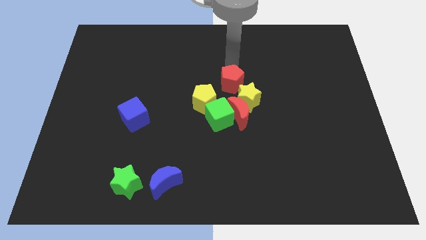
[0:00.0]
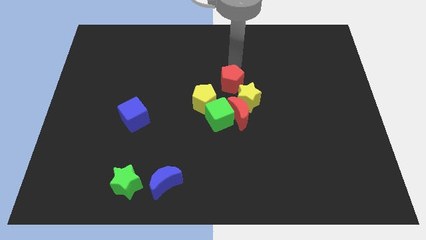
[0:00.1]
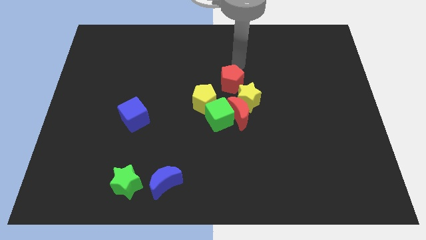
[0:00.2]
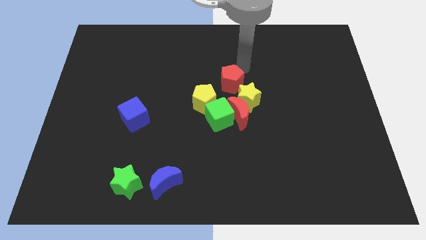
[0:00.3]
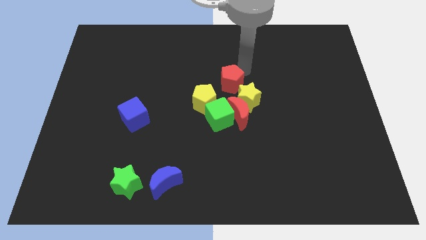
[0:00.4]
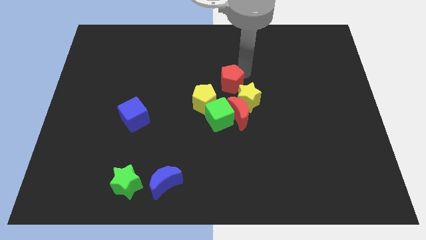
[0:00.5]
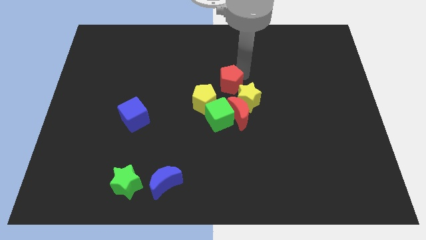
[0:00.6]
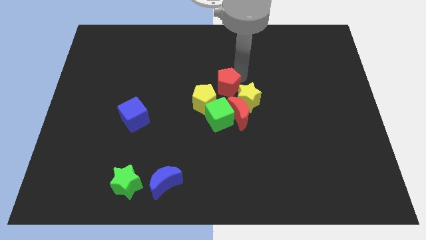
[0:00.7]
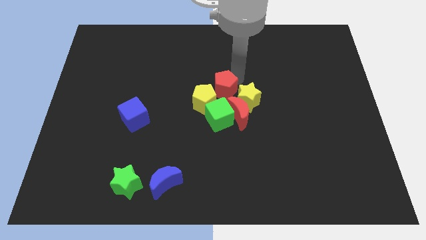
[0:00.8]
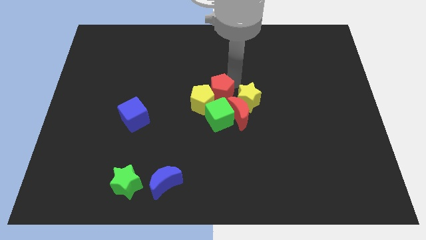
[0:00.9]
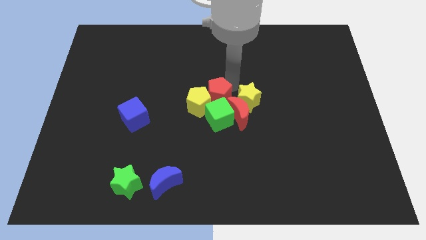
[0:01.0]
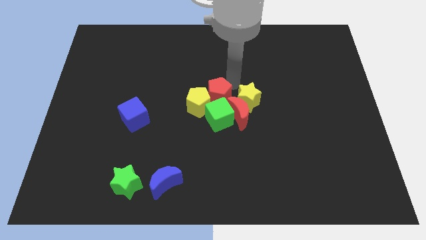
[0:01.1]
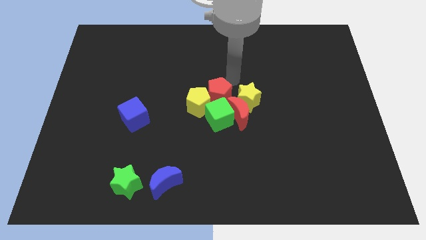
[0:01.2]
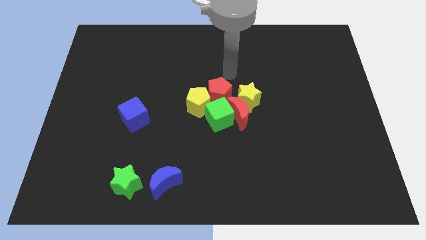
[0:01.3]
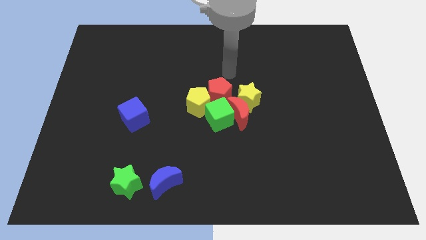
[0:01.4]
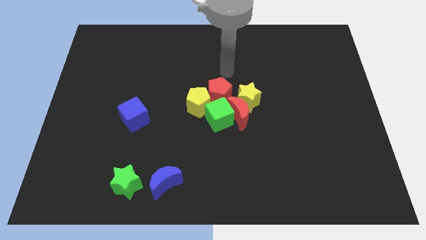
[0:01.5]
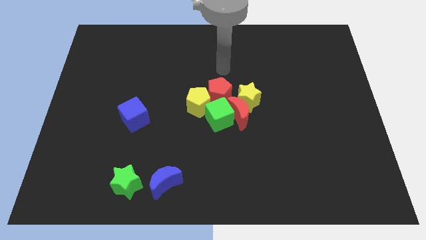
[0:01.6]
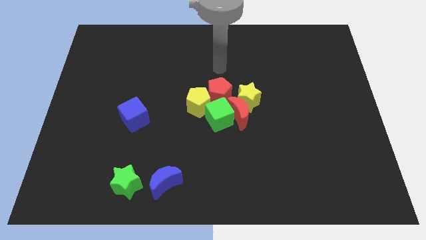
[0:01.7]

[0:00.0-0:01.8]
push the red pentagon into the yellow pentagon

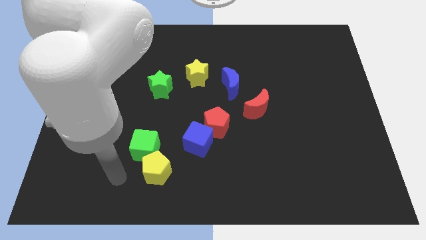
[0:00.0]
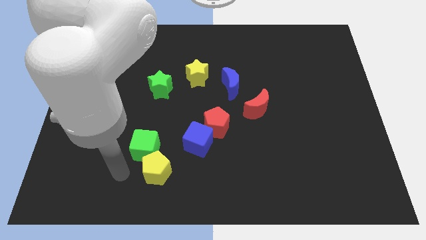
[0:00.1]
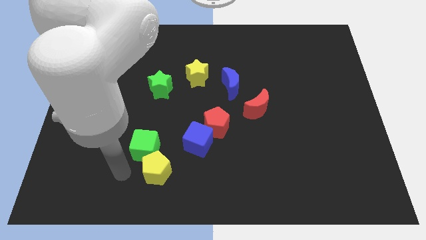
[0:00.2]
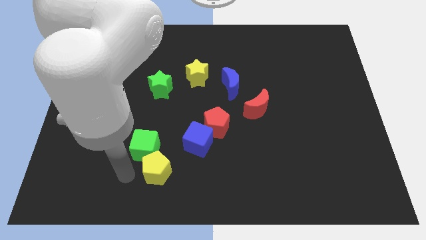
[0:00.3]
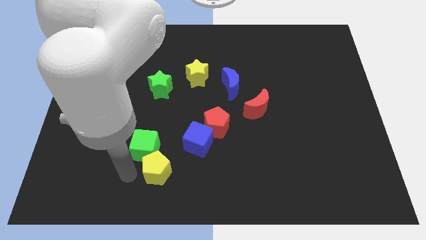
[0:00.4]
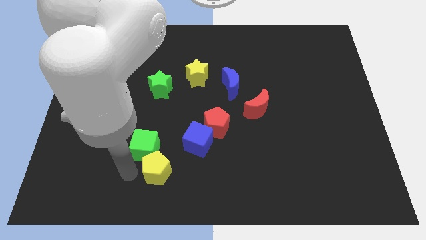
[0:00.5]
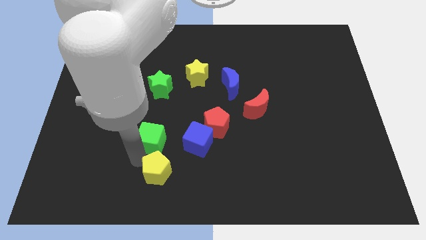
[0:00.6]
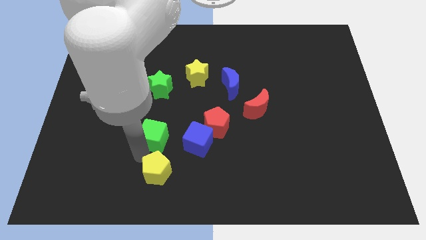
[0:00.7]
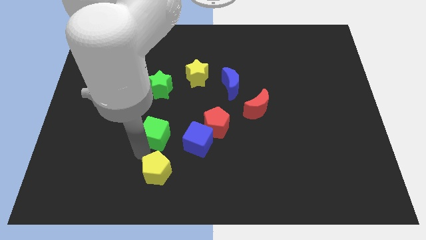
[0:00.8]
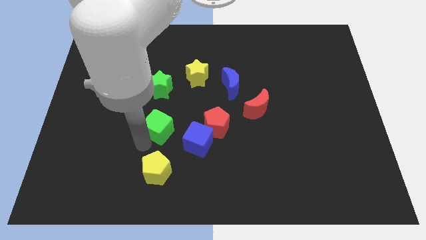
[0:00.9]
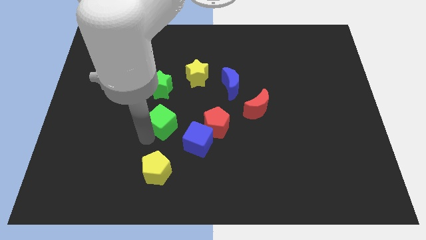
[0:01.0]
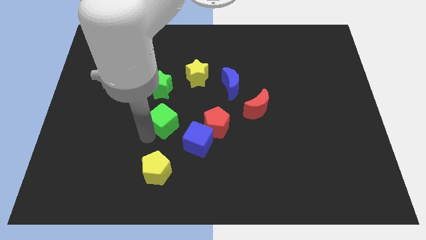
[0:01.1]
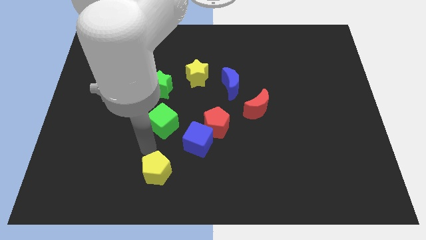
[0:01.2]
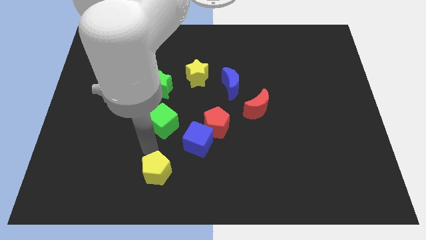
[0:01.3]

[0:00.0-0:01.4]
separate the green cube from the yellow pentagon

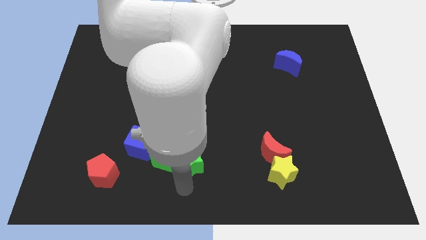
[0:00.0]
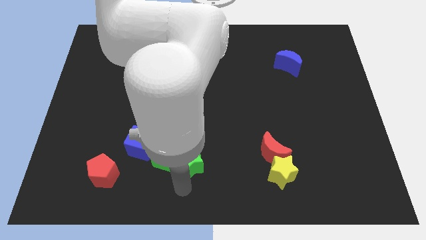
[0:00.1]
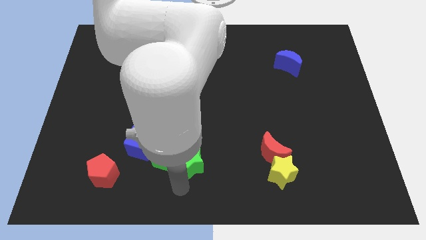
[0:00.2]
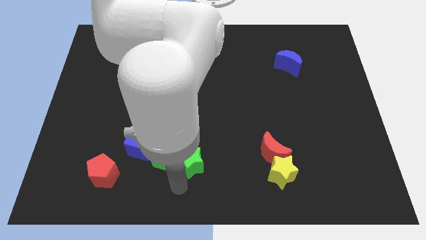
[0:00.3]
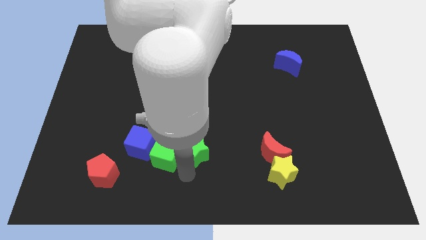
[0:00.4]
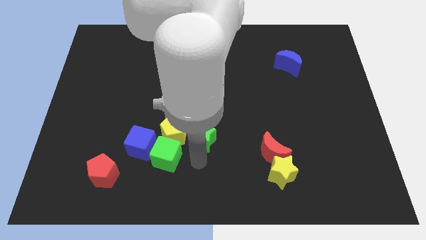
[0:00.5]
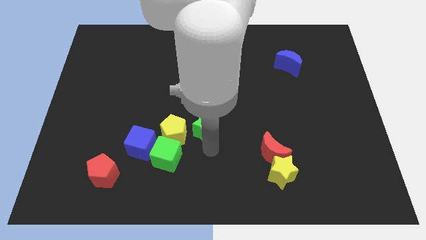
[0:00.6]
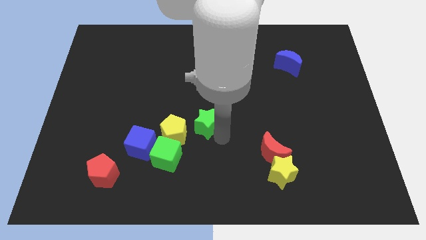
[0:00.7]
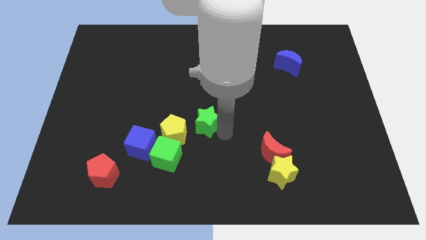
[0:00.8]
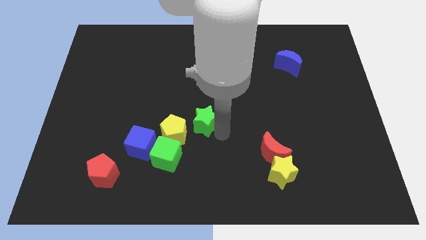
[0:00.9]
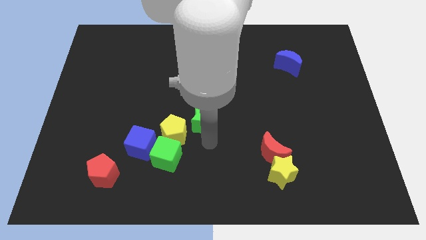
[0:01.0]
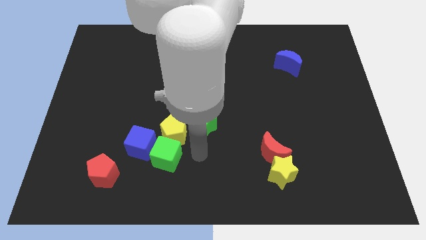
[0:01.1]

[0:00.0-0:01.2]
separate the green star from the green cube

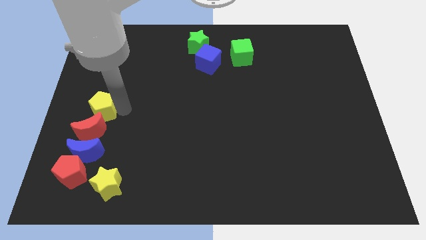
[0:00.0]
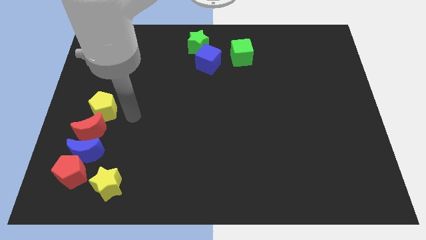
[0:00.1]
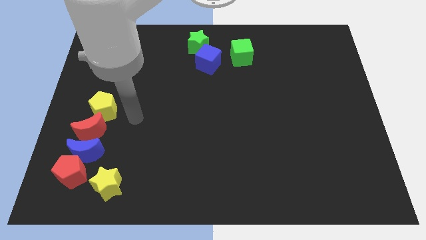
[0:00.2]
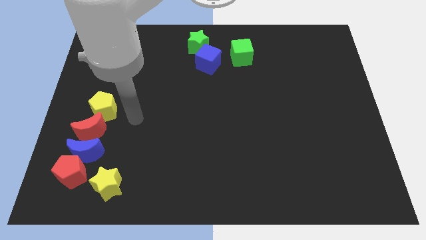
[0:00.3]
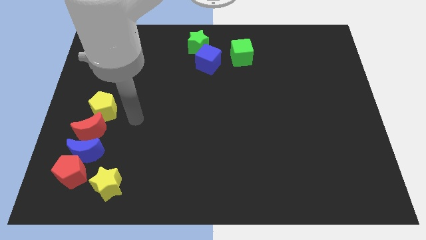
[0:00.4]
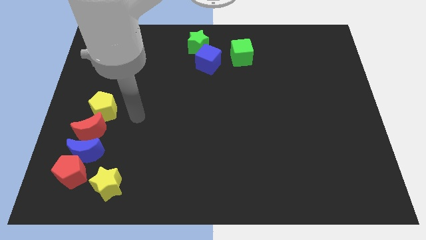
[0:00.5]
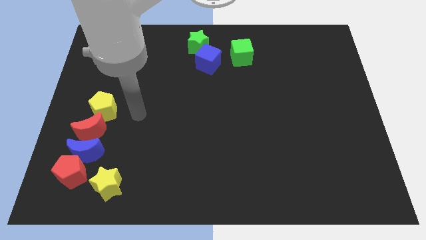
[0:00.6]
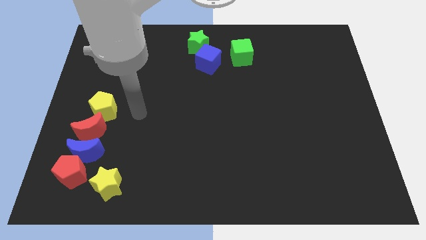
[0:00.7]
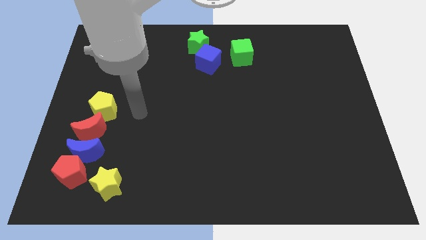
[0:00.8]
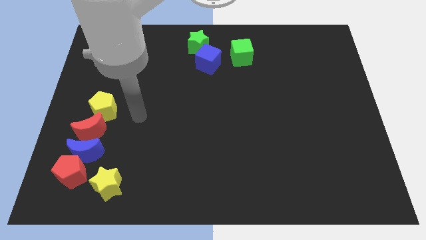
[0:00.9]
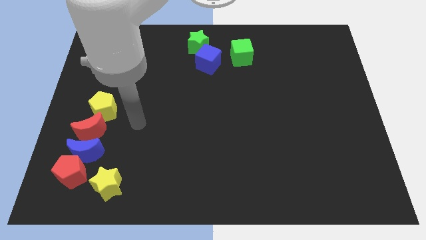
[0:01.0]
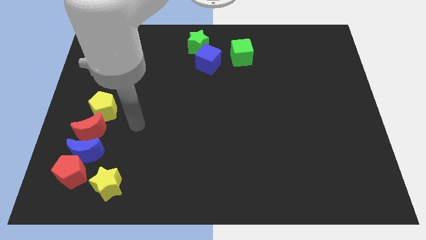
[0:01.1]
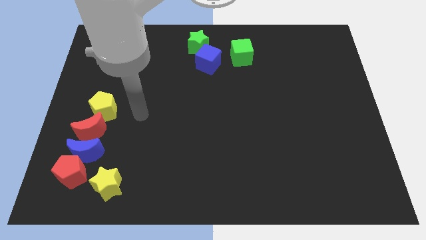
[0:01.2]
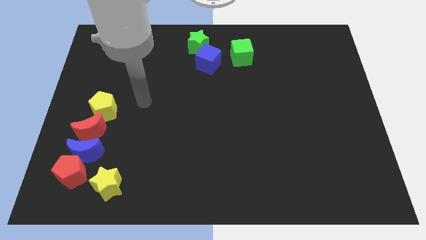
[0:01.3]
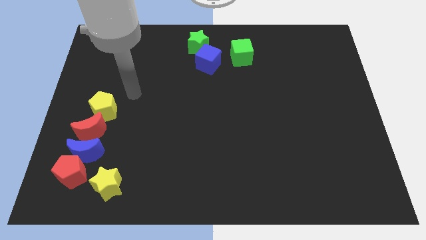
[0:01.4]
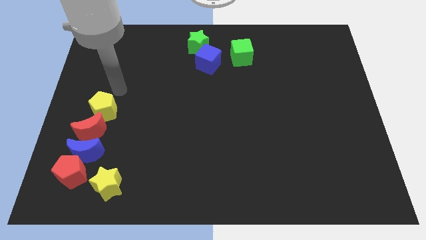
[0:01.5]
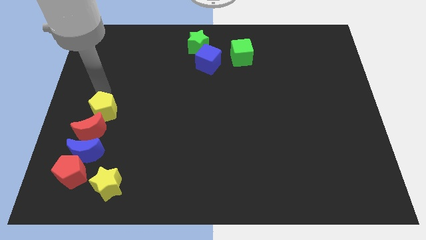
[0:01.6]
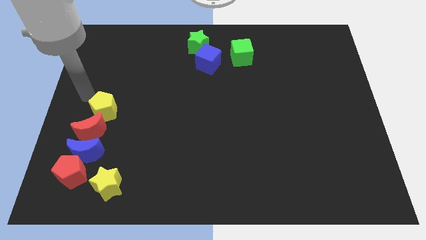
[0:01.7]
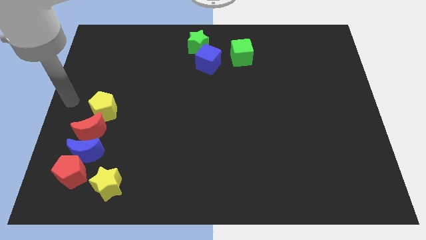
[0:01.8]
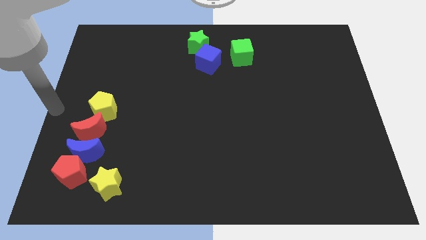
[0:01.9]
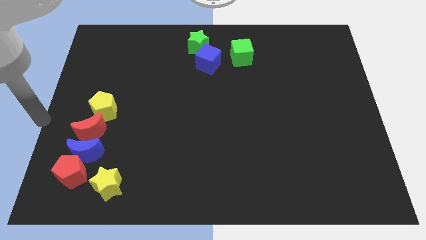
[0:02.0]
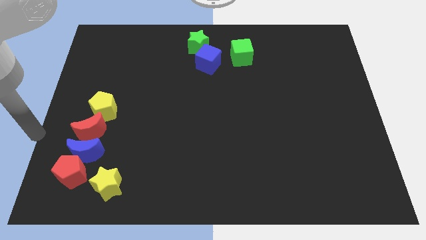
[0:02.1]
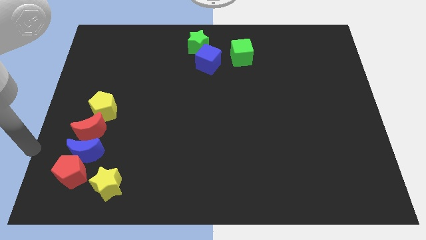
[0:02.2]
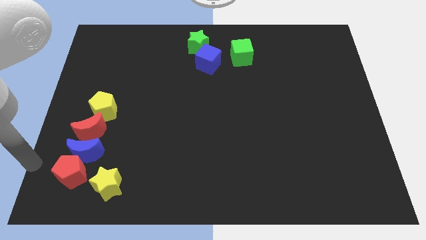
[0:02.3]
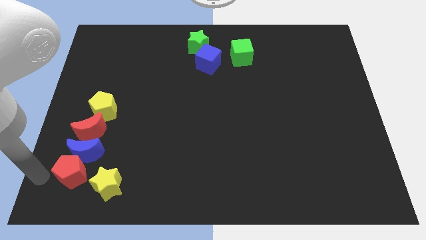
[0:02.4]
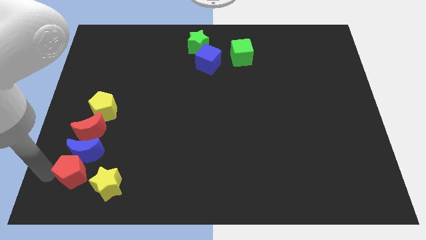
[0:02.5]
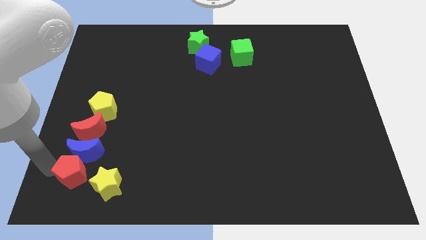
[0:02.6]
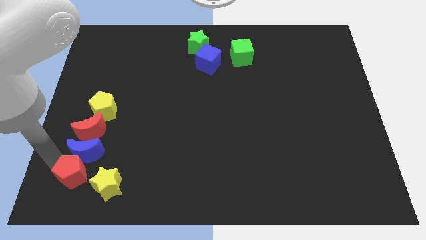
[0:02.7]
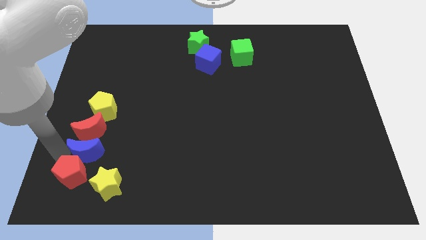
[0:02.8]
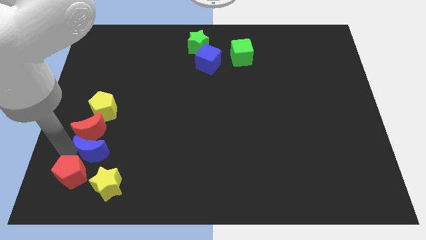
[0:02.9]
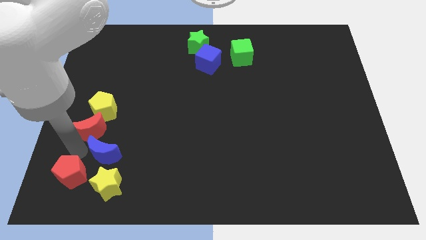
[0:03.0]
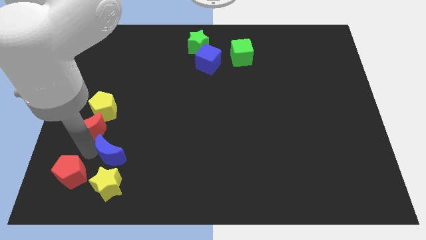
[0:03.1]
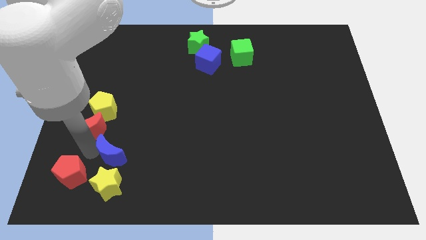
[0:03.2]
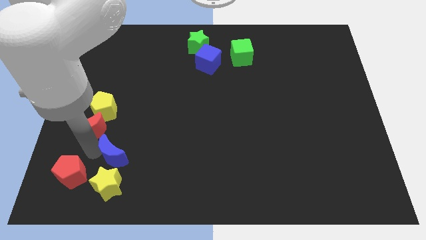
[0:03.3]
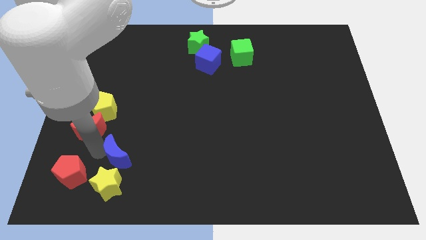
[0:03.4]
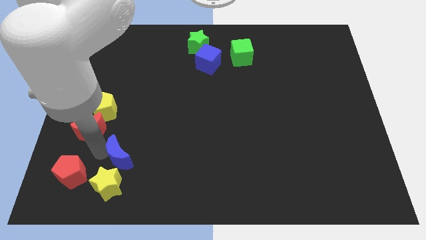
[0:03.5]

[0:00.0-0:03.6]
separate the blue moon from red blocks

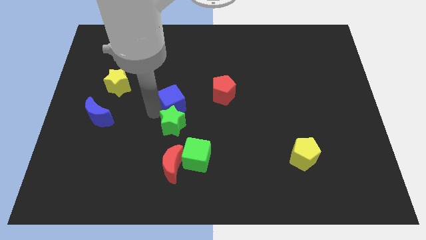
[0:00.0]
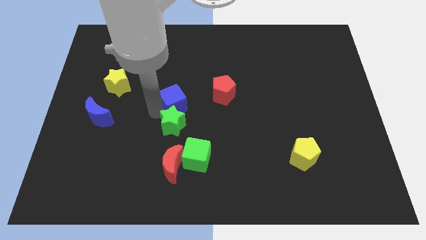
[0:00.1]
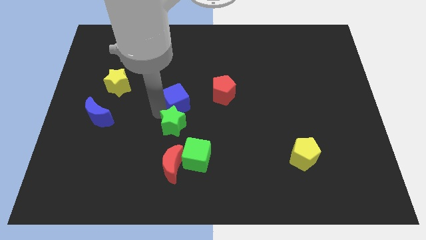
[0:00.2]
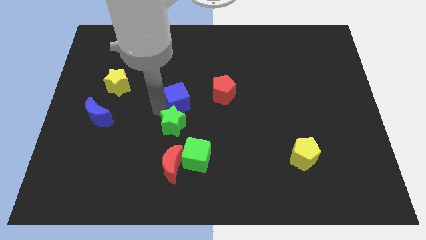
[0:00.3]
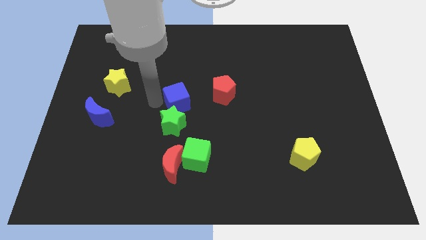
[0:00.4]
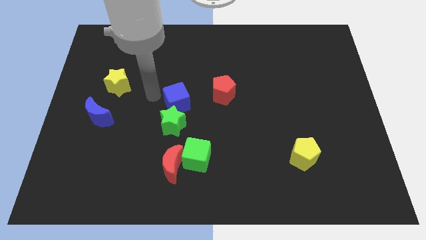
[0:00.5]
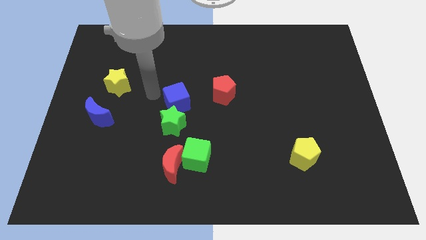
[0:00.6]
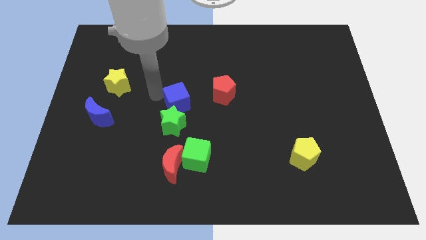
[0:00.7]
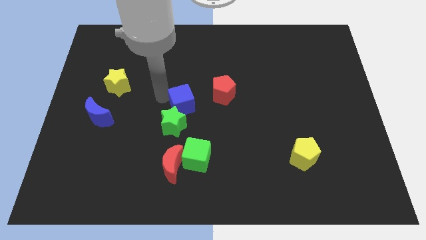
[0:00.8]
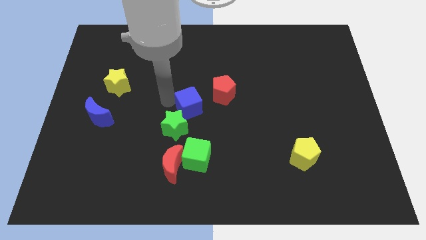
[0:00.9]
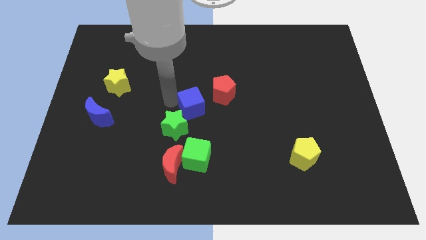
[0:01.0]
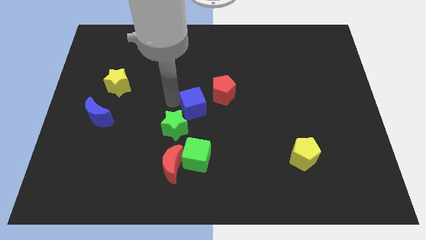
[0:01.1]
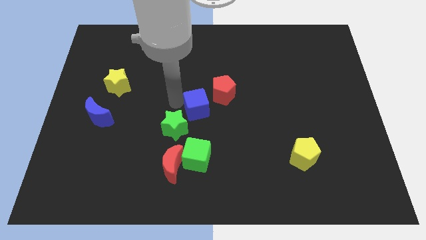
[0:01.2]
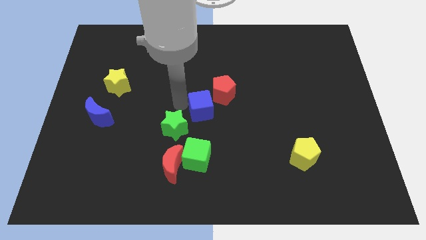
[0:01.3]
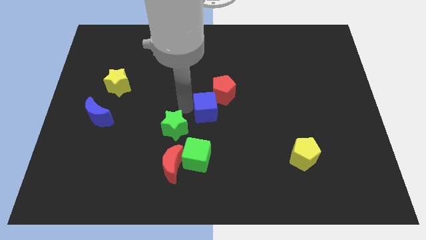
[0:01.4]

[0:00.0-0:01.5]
put the blue cube in between the red pentagon and green star
